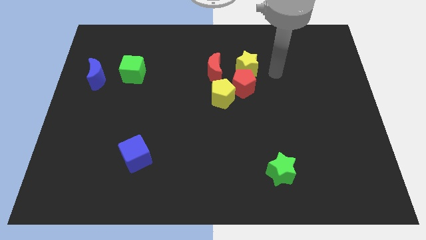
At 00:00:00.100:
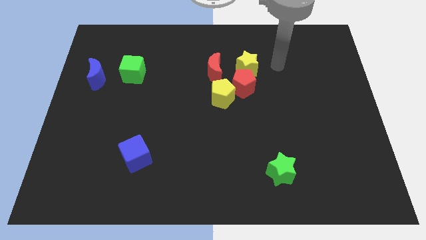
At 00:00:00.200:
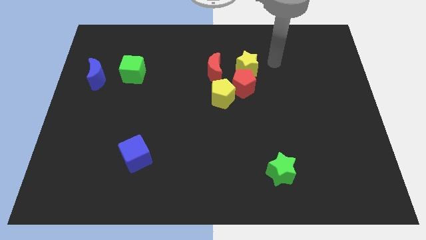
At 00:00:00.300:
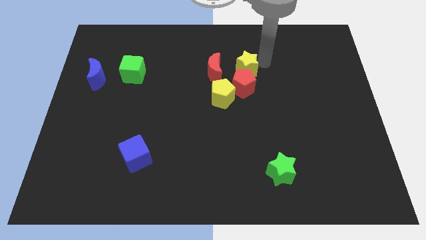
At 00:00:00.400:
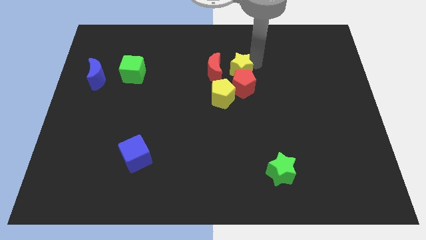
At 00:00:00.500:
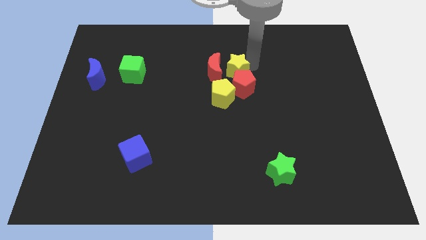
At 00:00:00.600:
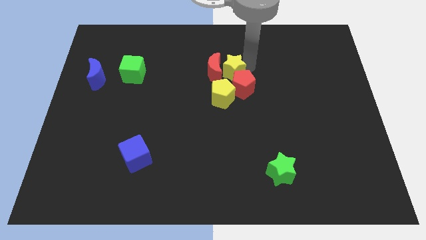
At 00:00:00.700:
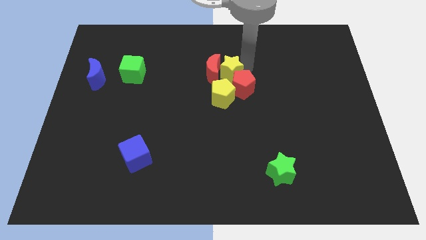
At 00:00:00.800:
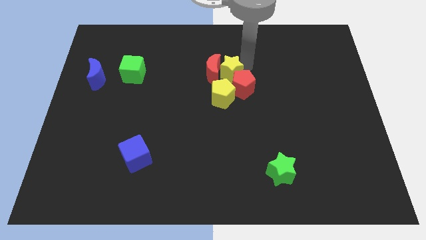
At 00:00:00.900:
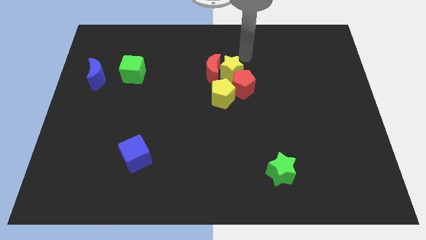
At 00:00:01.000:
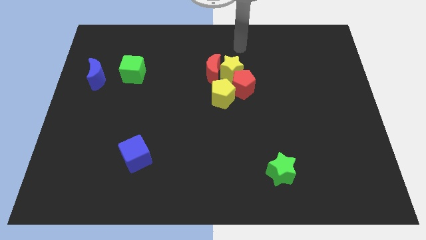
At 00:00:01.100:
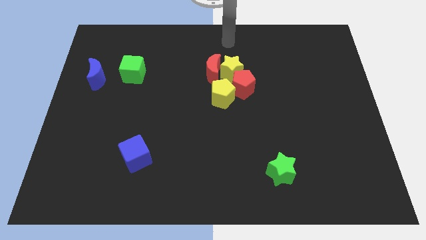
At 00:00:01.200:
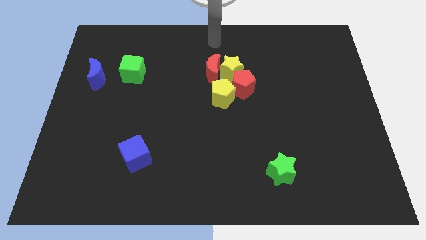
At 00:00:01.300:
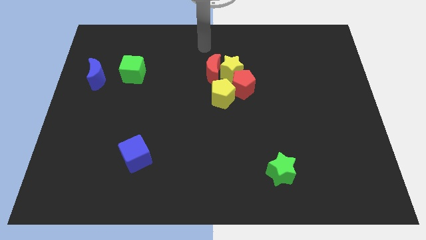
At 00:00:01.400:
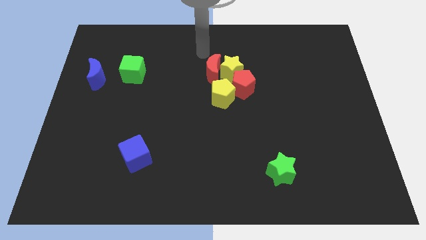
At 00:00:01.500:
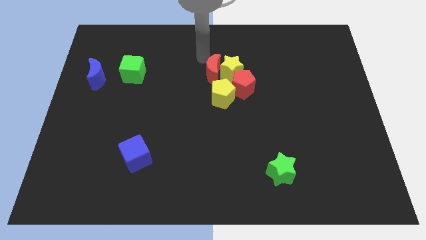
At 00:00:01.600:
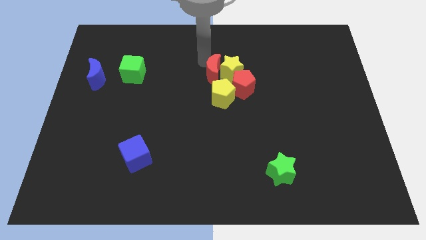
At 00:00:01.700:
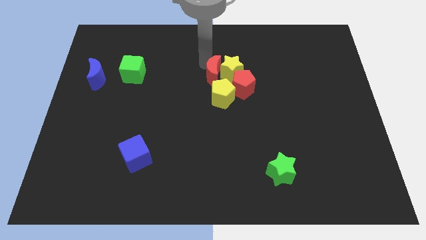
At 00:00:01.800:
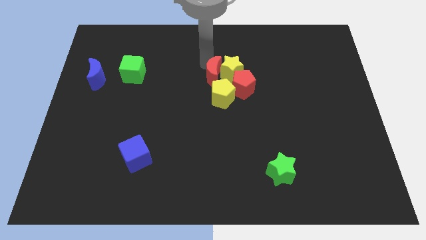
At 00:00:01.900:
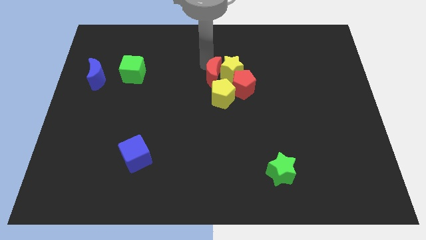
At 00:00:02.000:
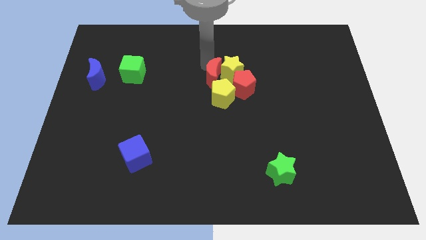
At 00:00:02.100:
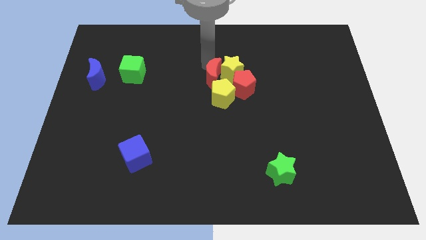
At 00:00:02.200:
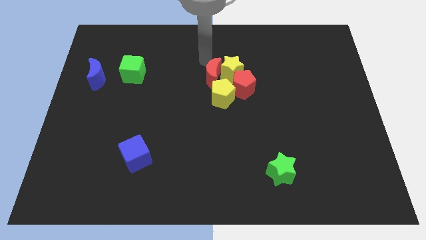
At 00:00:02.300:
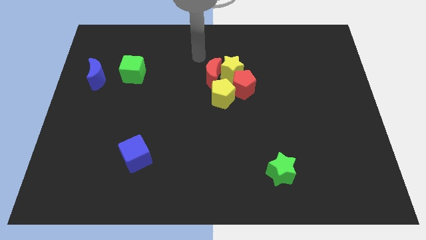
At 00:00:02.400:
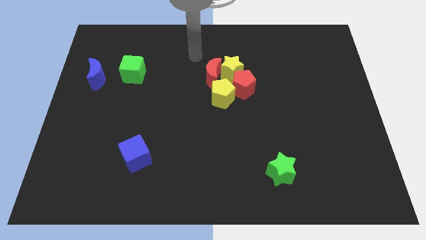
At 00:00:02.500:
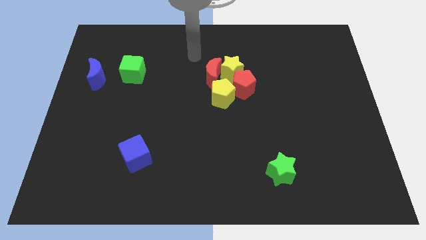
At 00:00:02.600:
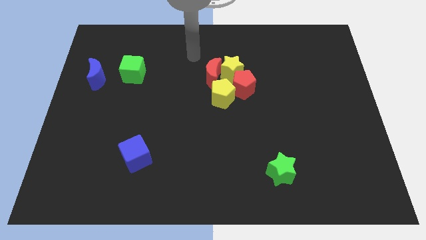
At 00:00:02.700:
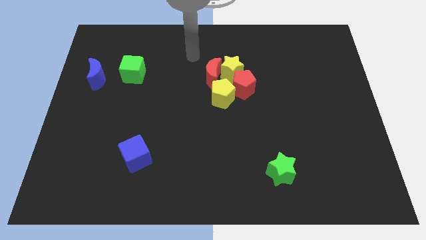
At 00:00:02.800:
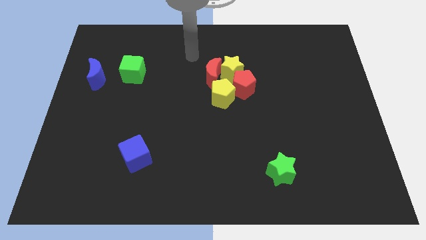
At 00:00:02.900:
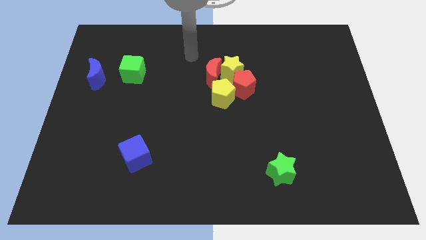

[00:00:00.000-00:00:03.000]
put the yellow star and red moon together

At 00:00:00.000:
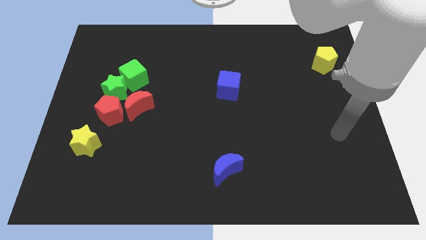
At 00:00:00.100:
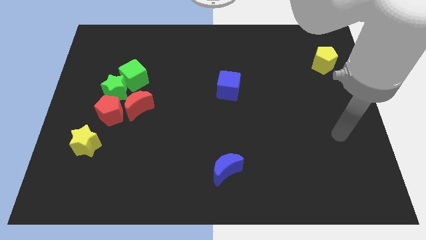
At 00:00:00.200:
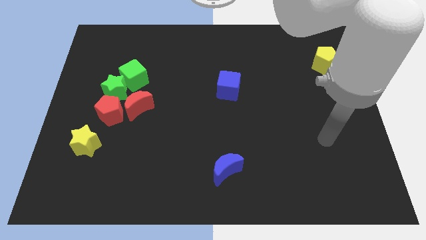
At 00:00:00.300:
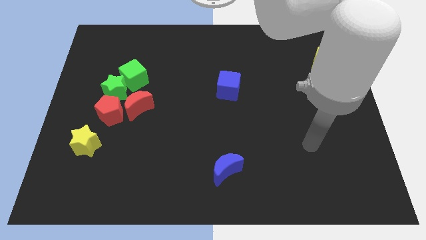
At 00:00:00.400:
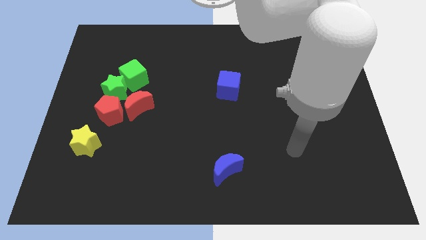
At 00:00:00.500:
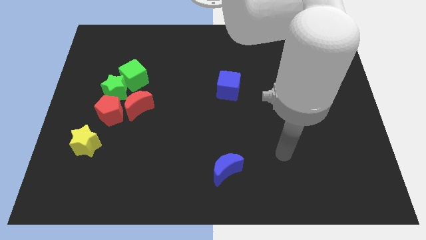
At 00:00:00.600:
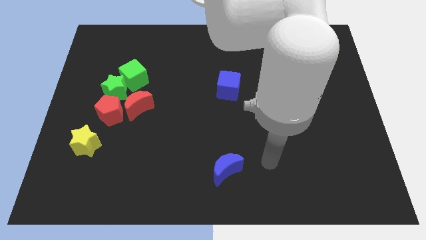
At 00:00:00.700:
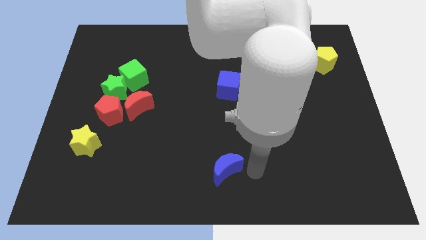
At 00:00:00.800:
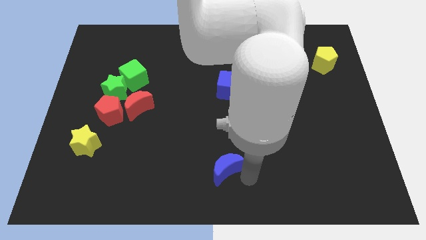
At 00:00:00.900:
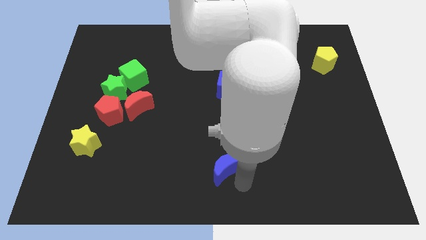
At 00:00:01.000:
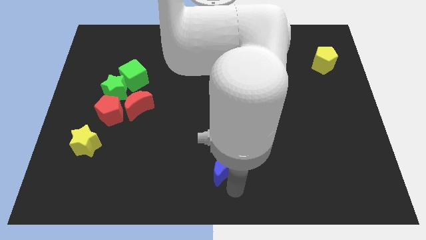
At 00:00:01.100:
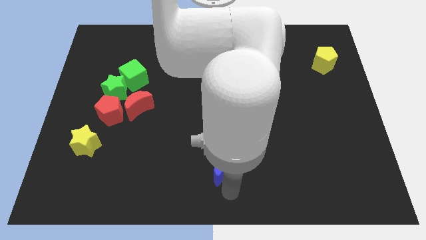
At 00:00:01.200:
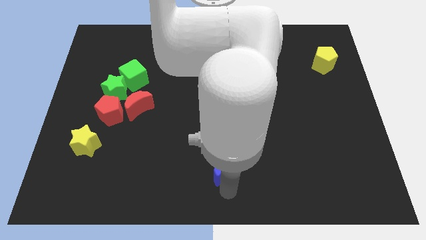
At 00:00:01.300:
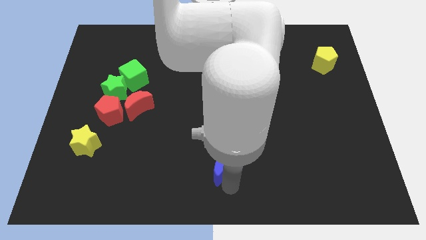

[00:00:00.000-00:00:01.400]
place your arm below the blue moon

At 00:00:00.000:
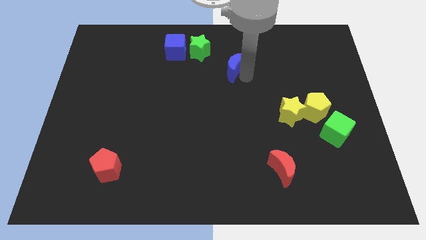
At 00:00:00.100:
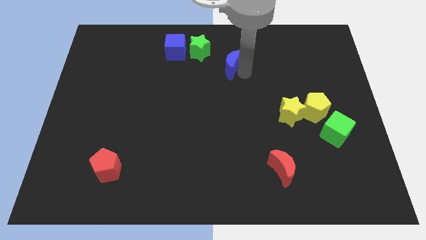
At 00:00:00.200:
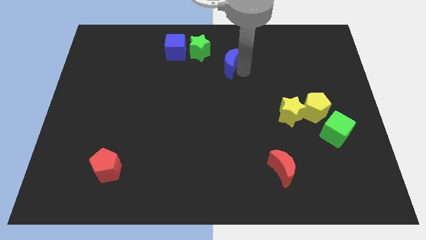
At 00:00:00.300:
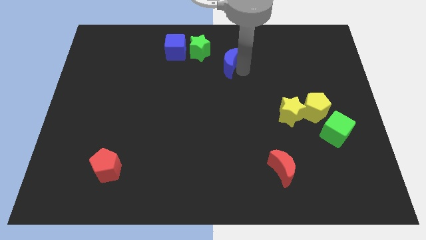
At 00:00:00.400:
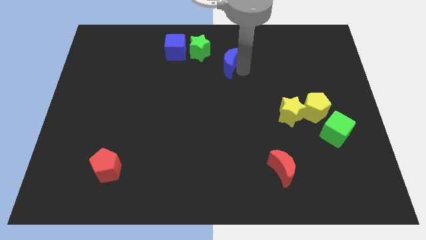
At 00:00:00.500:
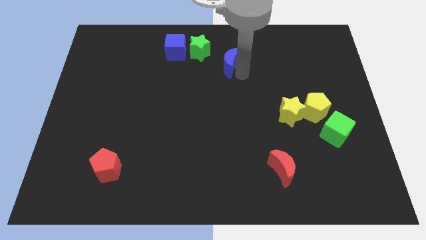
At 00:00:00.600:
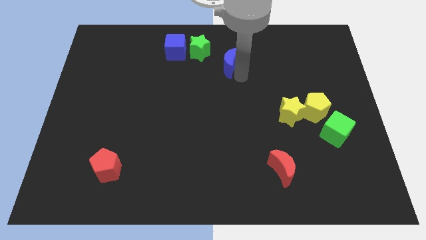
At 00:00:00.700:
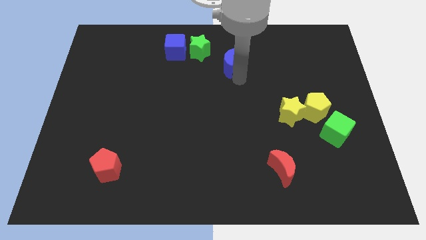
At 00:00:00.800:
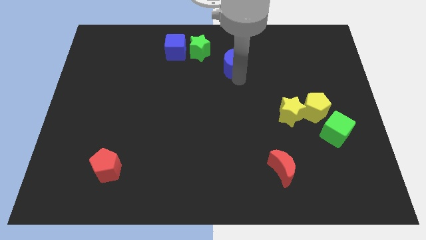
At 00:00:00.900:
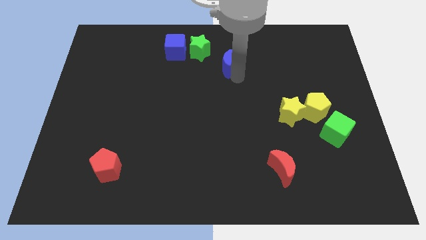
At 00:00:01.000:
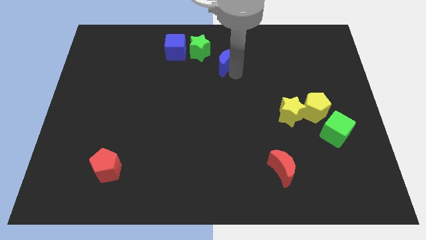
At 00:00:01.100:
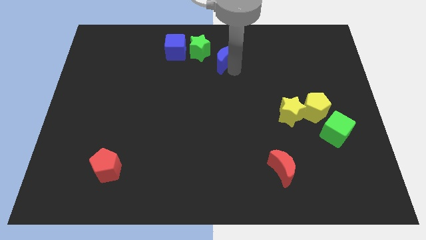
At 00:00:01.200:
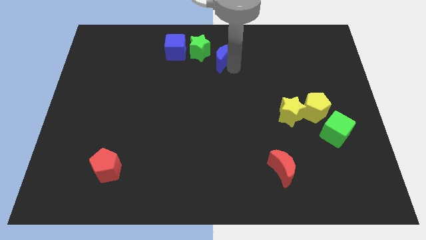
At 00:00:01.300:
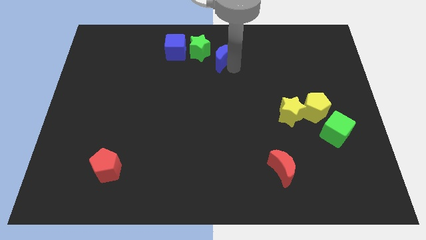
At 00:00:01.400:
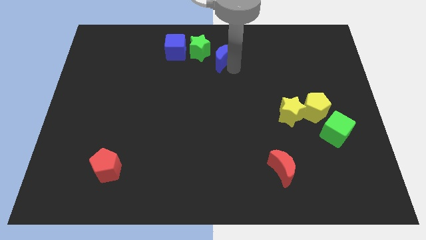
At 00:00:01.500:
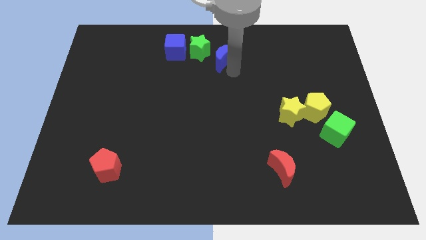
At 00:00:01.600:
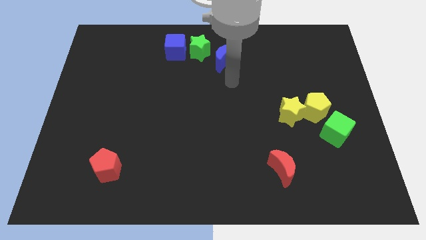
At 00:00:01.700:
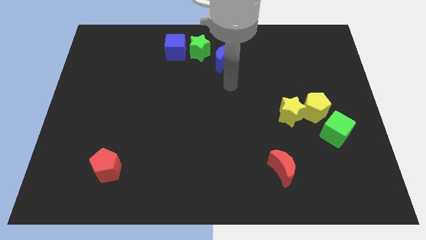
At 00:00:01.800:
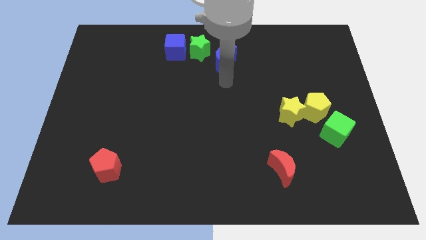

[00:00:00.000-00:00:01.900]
place the blue cube towards the right side of the green star

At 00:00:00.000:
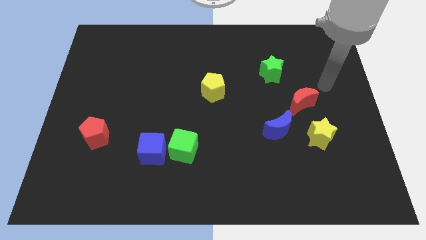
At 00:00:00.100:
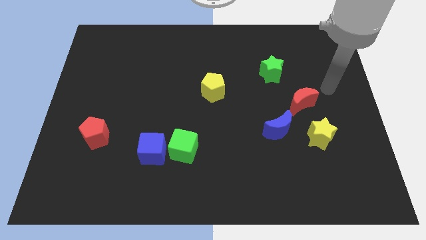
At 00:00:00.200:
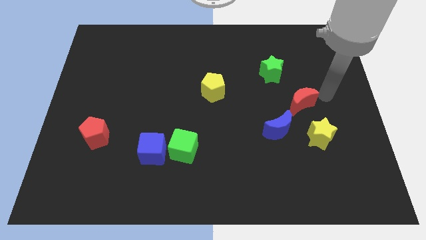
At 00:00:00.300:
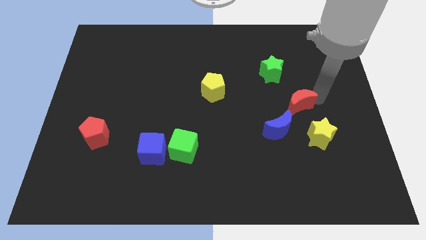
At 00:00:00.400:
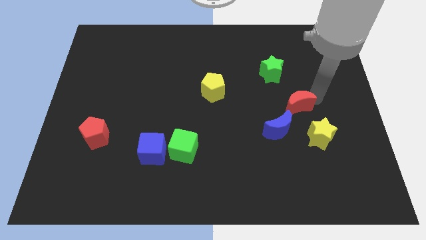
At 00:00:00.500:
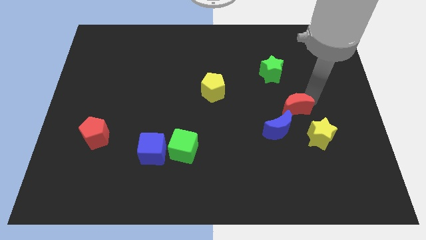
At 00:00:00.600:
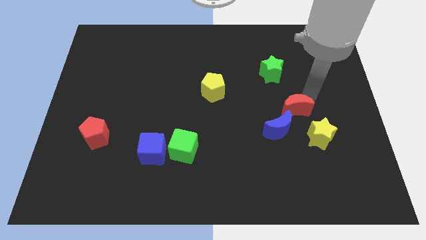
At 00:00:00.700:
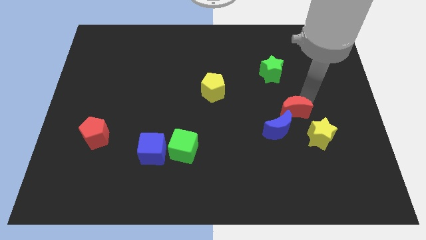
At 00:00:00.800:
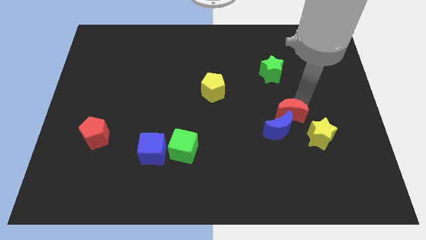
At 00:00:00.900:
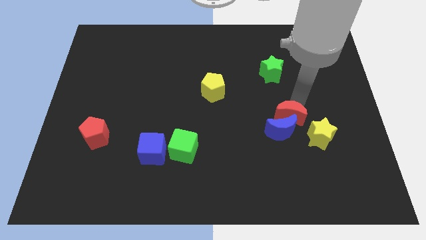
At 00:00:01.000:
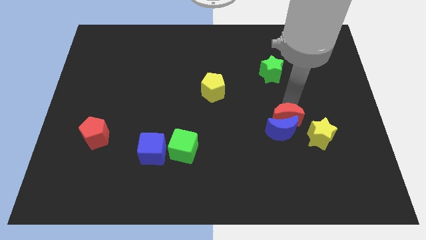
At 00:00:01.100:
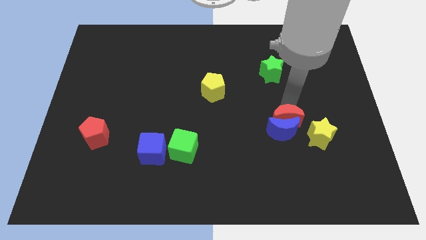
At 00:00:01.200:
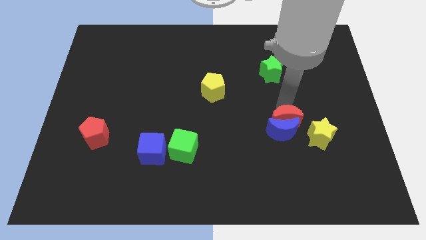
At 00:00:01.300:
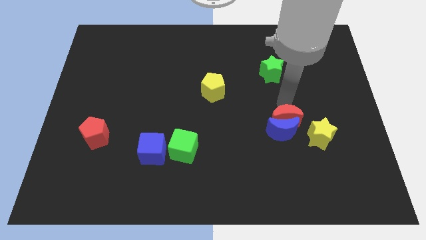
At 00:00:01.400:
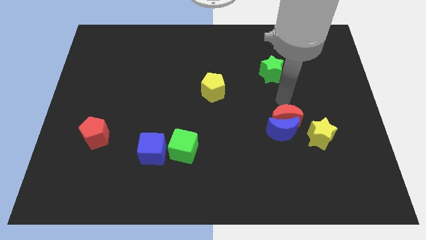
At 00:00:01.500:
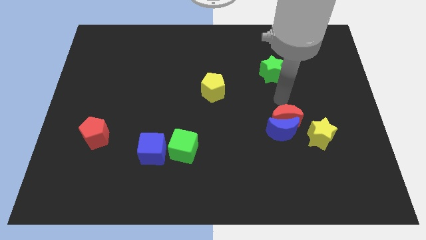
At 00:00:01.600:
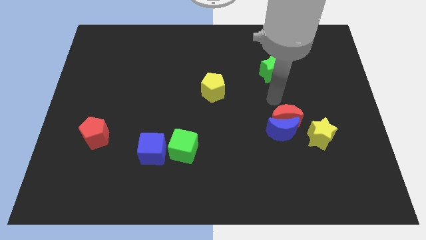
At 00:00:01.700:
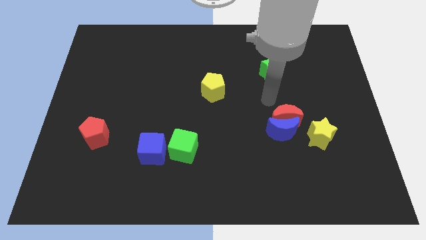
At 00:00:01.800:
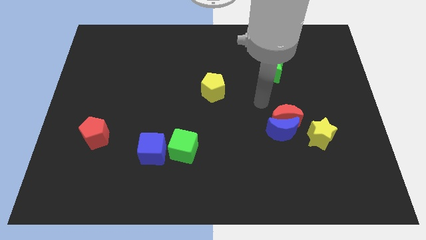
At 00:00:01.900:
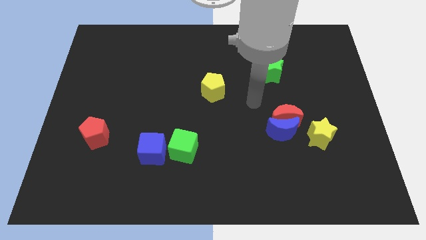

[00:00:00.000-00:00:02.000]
move the red crescent above the blue crescent

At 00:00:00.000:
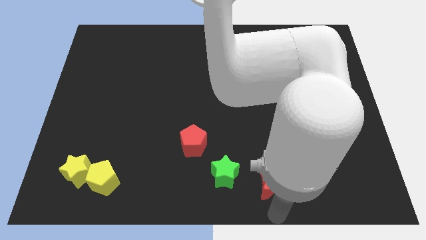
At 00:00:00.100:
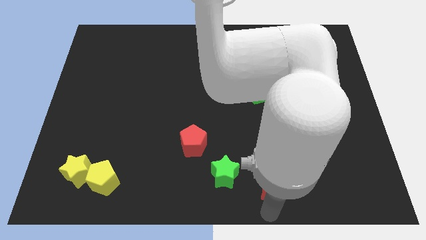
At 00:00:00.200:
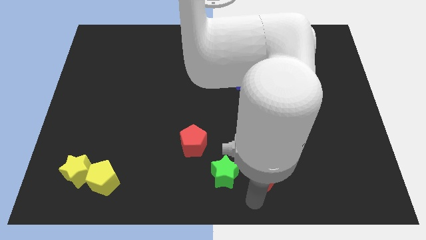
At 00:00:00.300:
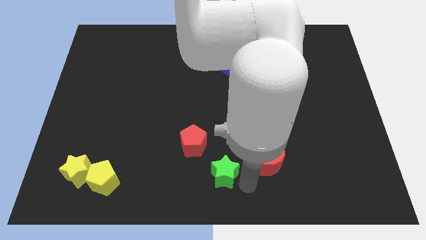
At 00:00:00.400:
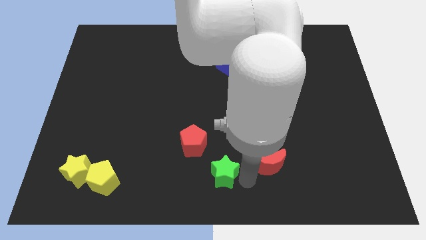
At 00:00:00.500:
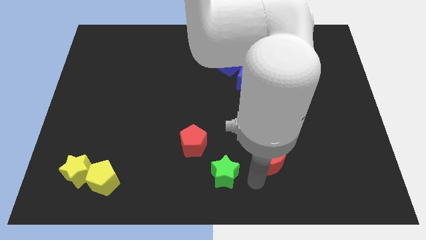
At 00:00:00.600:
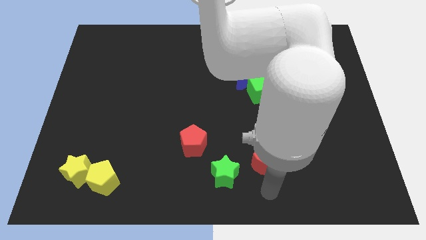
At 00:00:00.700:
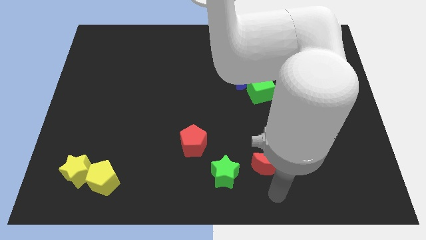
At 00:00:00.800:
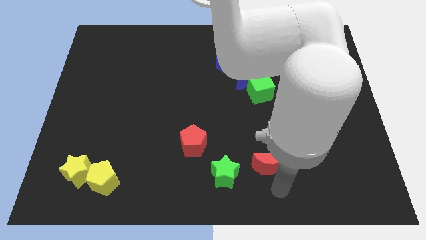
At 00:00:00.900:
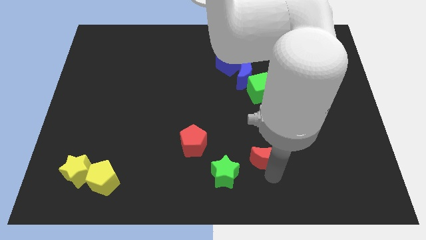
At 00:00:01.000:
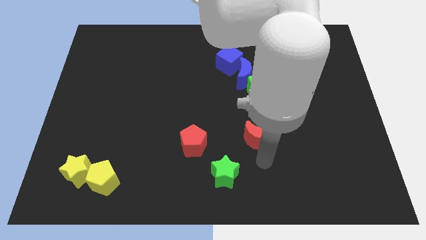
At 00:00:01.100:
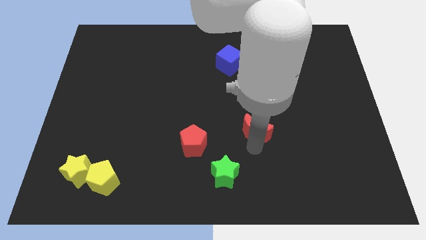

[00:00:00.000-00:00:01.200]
push the red crescent to the right of red pentagon
